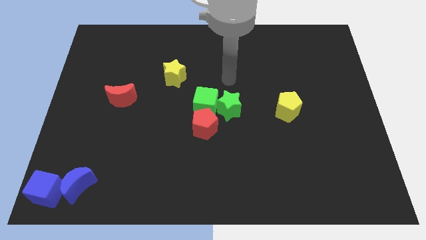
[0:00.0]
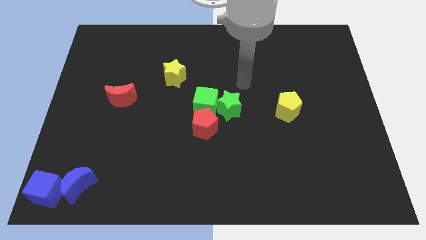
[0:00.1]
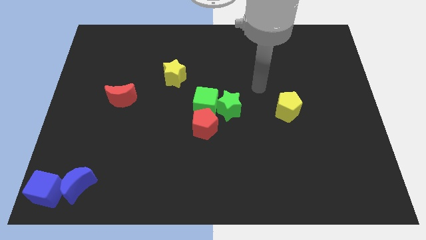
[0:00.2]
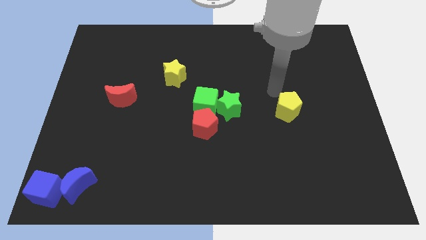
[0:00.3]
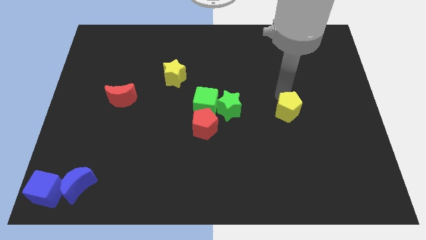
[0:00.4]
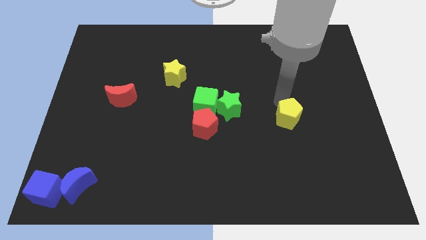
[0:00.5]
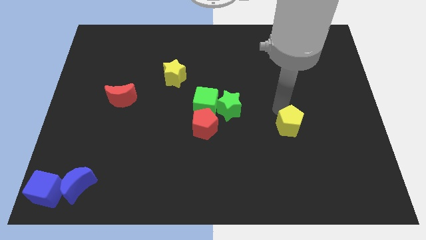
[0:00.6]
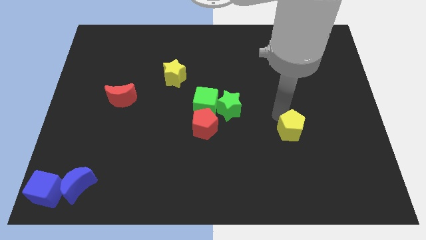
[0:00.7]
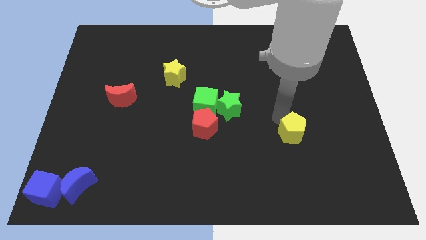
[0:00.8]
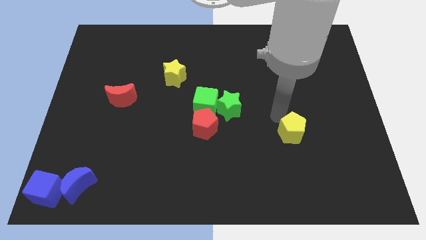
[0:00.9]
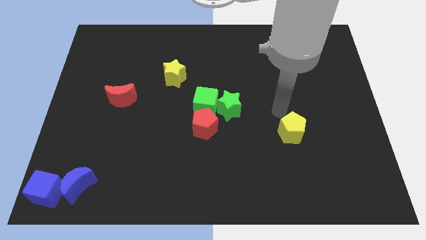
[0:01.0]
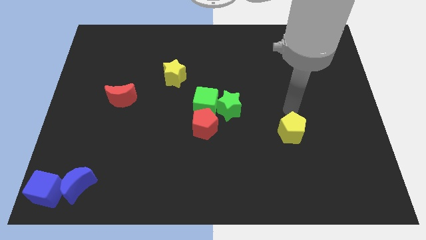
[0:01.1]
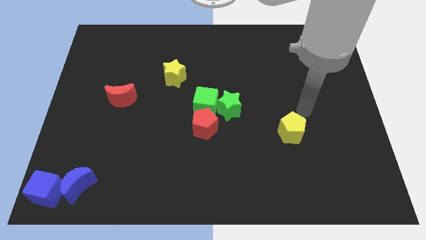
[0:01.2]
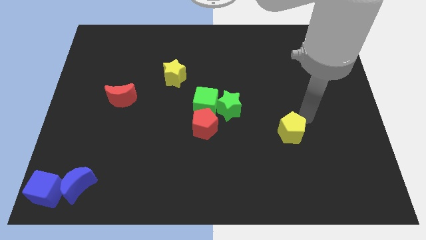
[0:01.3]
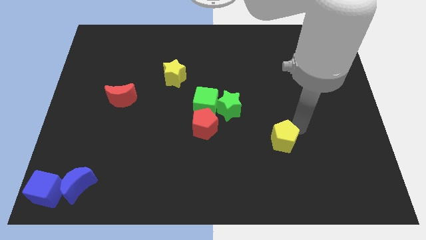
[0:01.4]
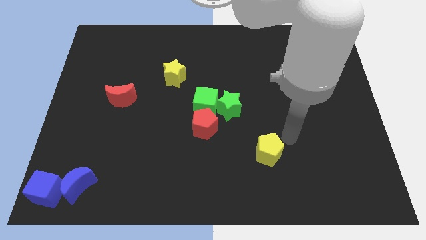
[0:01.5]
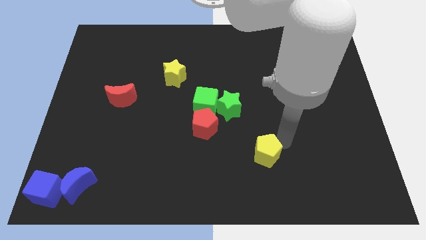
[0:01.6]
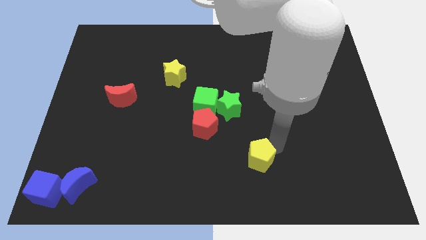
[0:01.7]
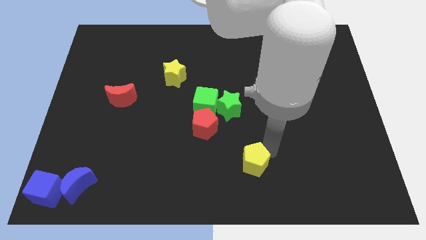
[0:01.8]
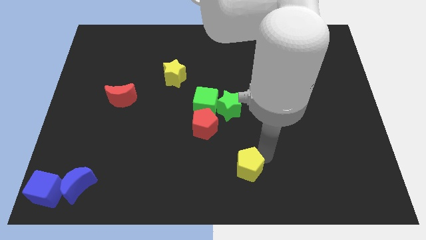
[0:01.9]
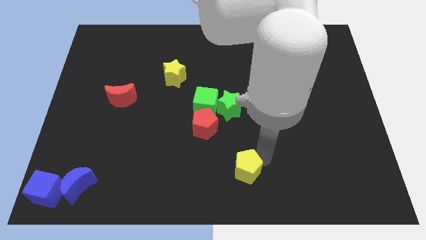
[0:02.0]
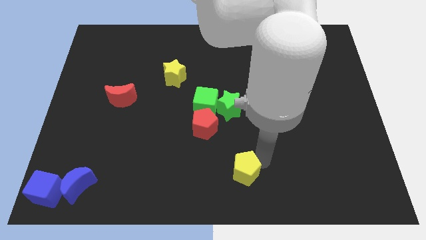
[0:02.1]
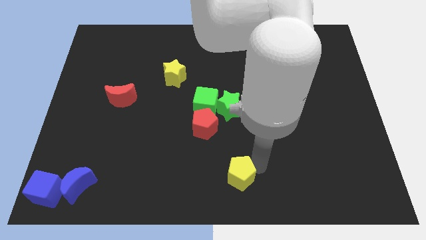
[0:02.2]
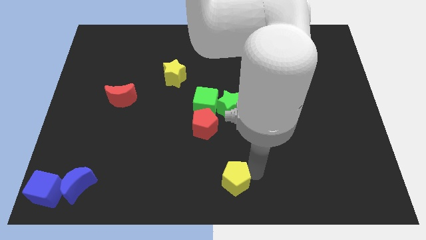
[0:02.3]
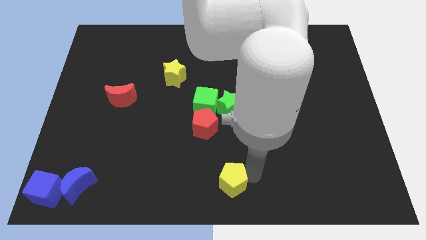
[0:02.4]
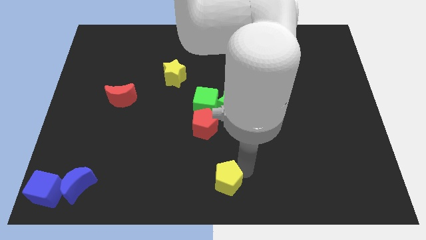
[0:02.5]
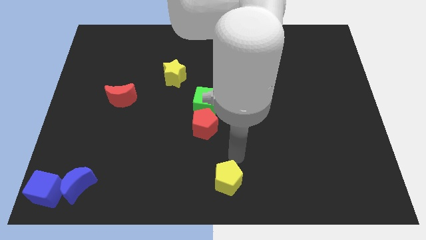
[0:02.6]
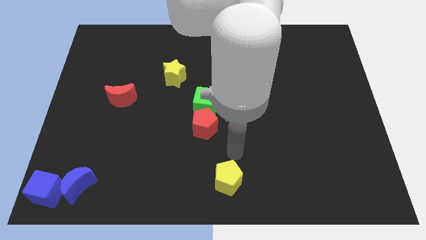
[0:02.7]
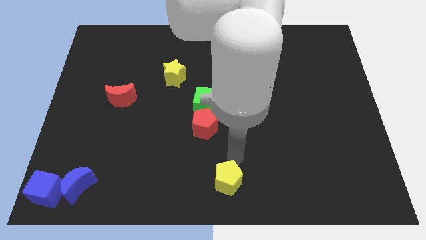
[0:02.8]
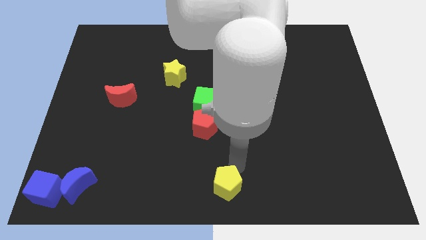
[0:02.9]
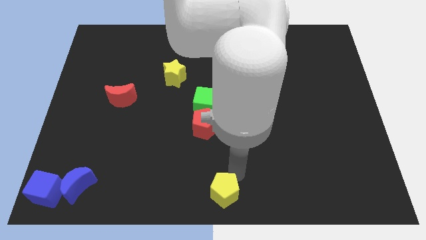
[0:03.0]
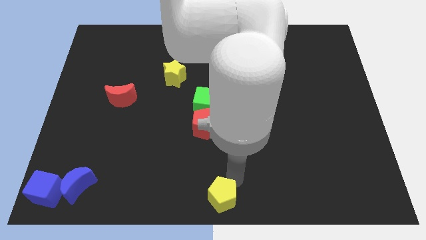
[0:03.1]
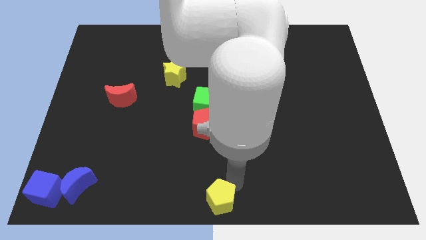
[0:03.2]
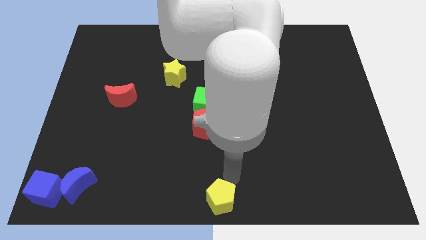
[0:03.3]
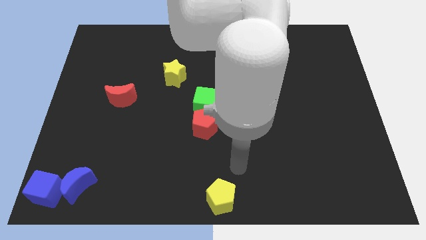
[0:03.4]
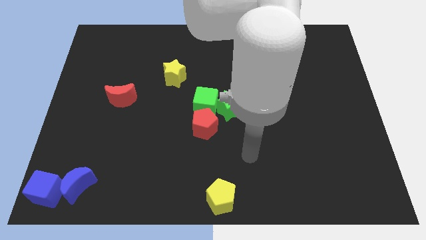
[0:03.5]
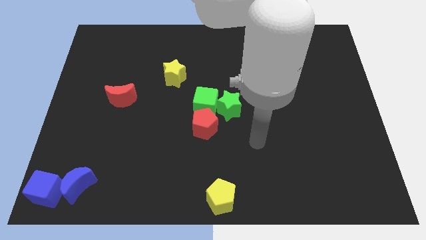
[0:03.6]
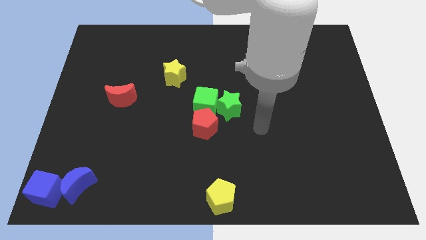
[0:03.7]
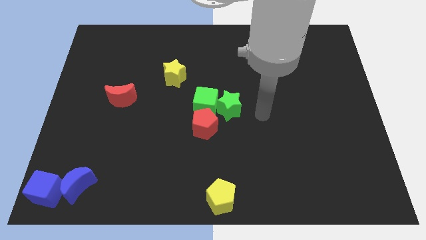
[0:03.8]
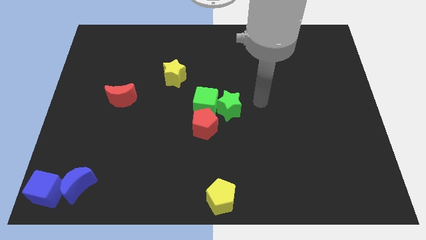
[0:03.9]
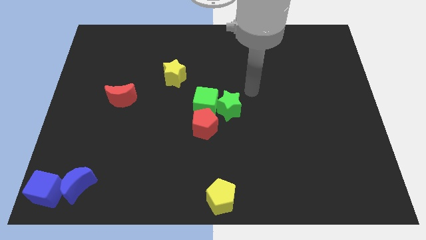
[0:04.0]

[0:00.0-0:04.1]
move the yellow pentagon to the bottom center of the board

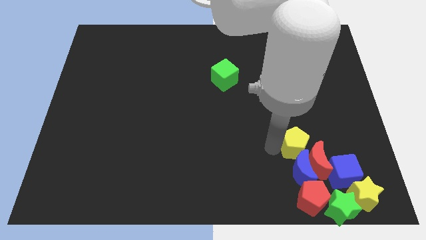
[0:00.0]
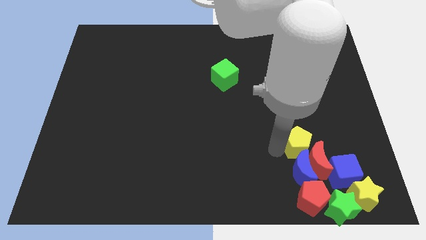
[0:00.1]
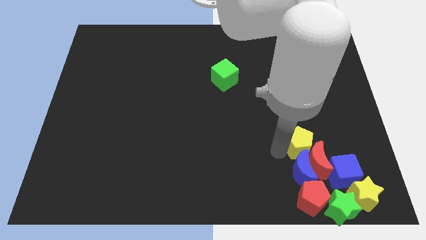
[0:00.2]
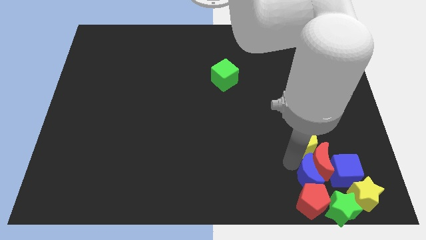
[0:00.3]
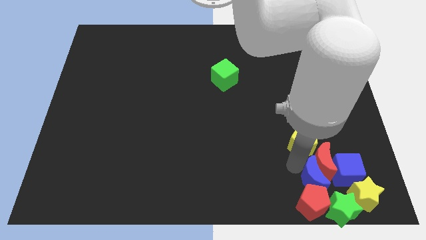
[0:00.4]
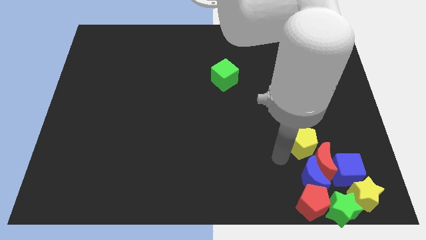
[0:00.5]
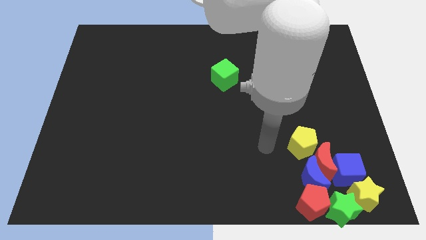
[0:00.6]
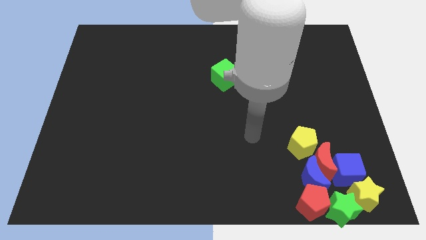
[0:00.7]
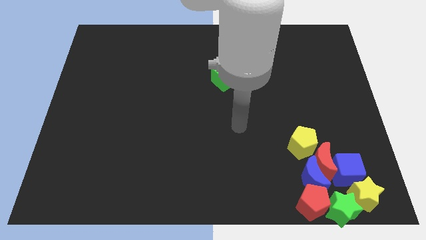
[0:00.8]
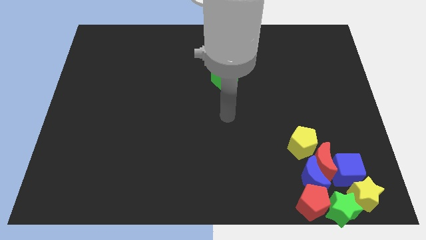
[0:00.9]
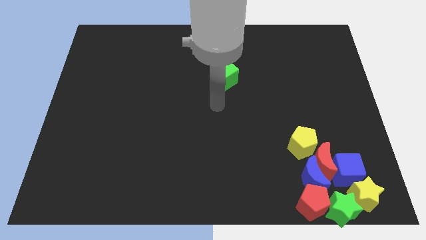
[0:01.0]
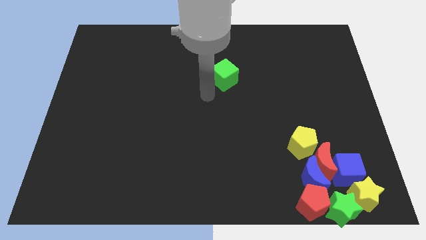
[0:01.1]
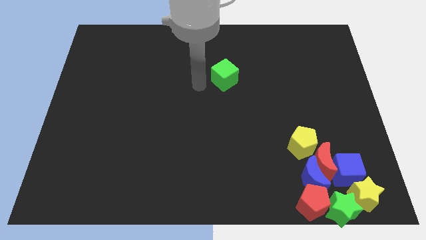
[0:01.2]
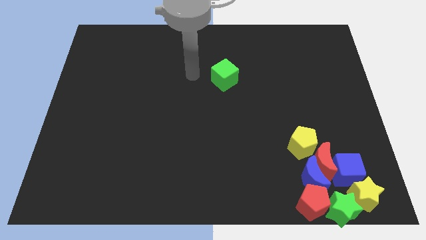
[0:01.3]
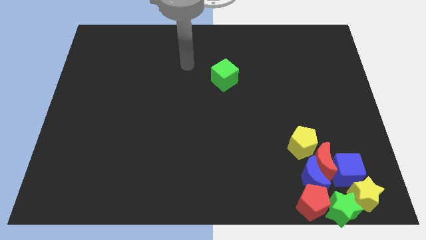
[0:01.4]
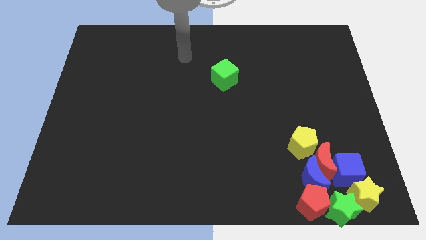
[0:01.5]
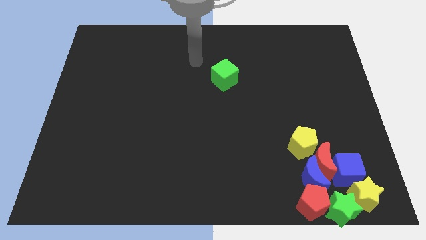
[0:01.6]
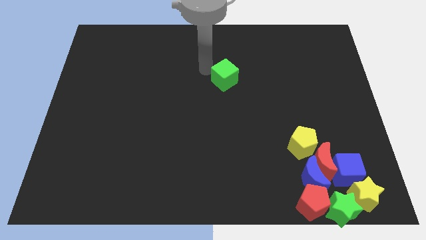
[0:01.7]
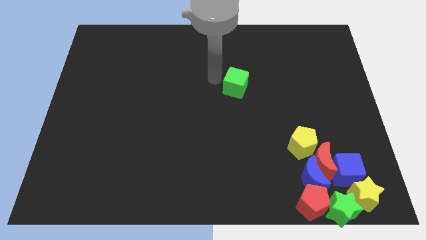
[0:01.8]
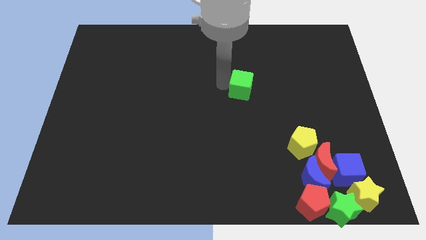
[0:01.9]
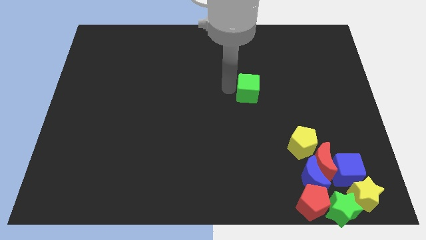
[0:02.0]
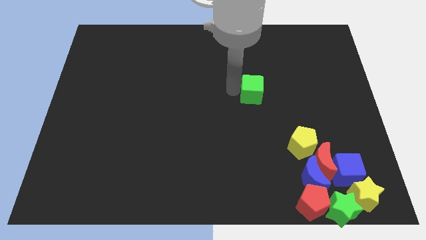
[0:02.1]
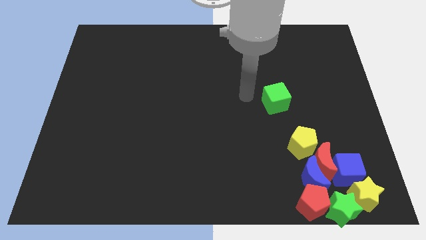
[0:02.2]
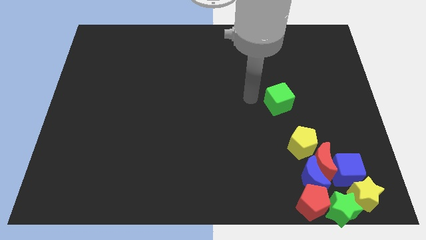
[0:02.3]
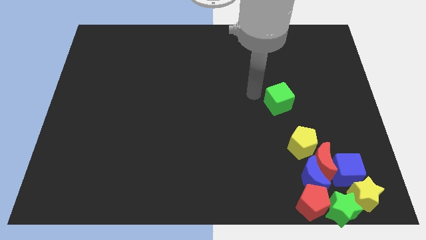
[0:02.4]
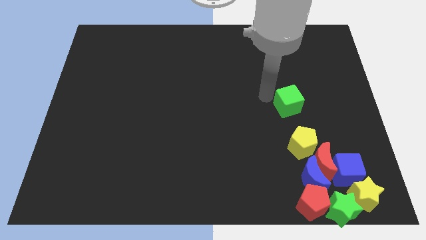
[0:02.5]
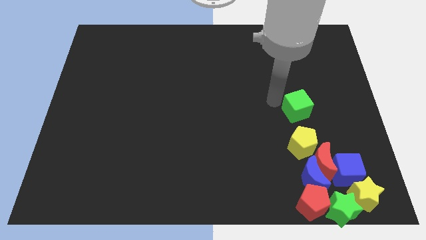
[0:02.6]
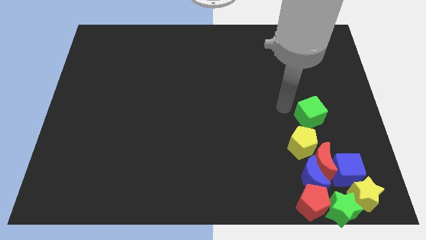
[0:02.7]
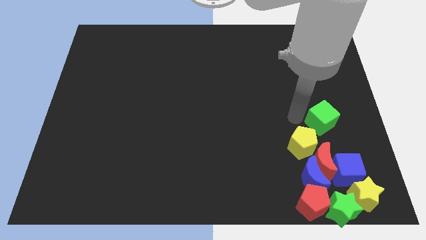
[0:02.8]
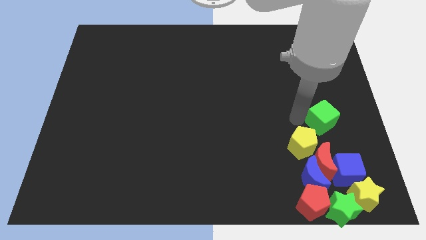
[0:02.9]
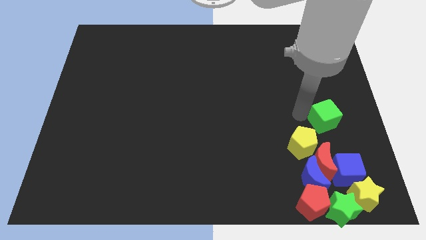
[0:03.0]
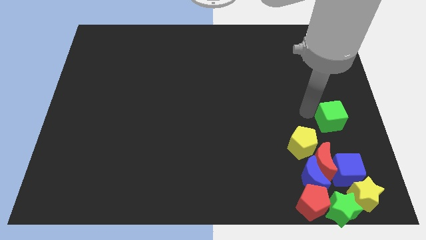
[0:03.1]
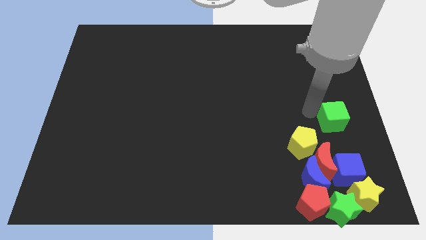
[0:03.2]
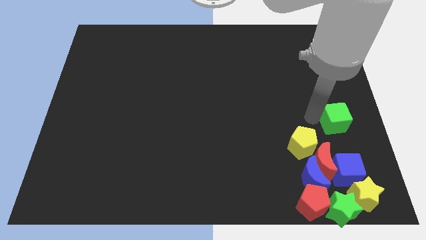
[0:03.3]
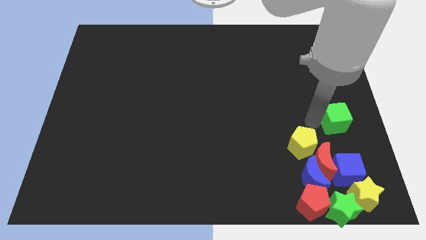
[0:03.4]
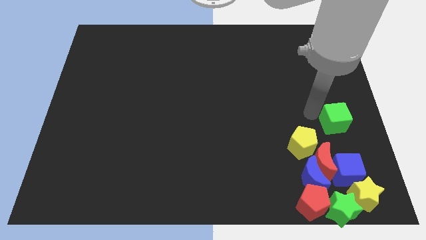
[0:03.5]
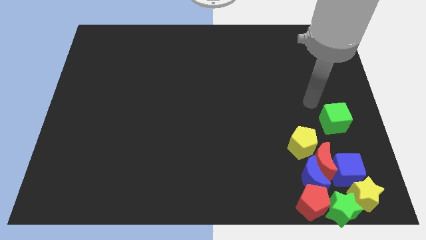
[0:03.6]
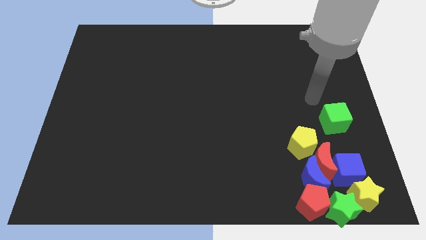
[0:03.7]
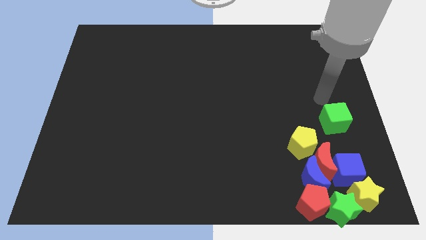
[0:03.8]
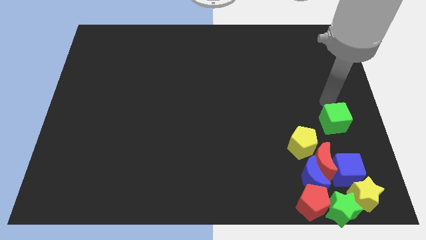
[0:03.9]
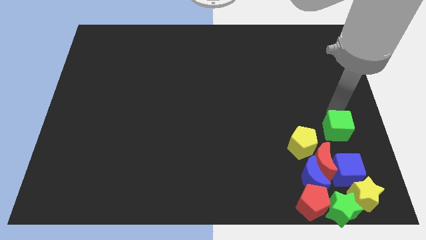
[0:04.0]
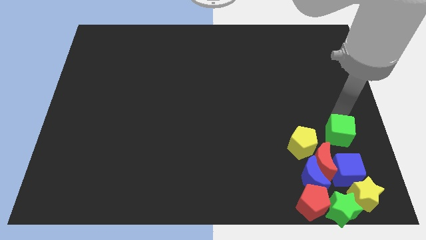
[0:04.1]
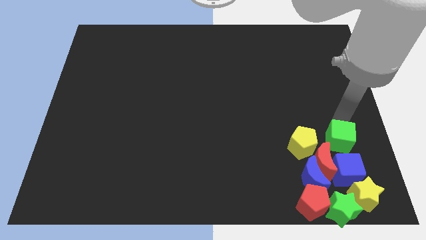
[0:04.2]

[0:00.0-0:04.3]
place the green cube right to the yellow pentagon

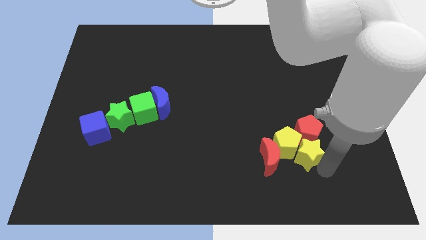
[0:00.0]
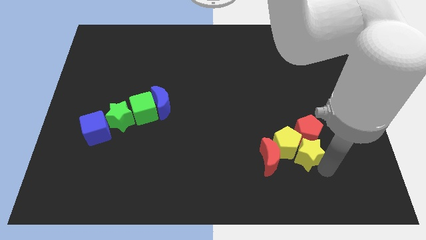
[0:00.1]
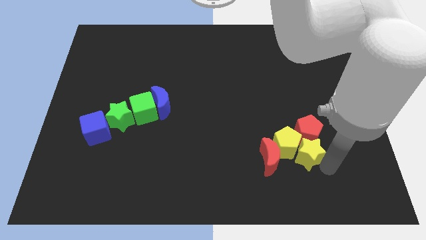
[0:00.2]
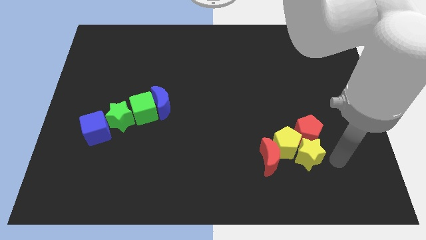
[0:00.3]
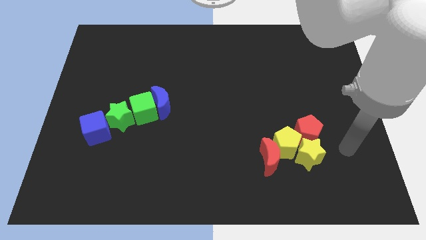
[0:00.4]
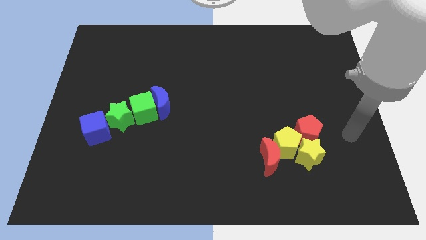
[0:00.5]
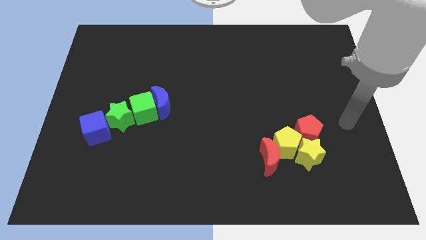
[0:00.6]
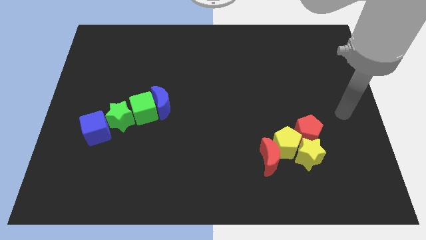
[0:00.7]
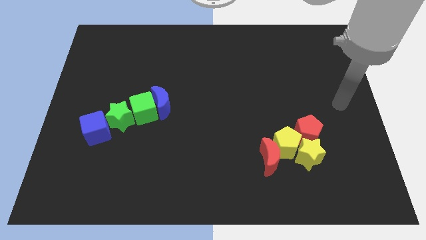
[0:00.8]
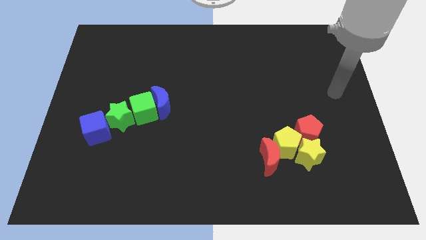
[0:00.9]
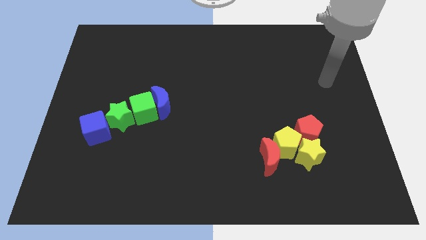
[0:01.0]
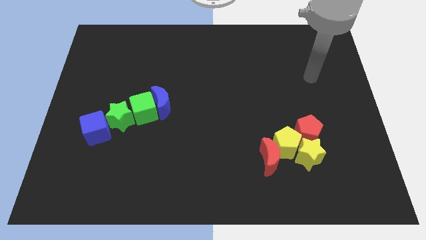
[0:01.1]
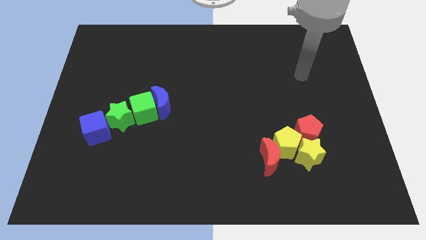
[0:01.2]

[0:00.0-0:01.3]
move your arm away from the yellow star
